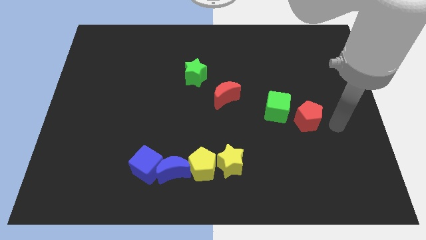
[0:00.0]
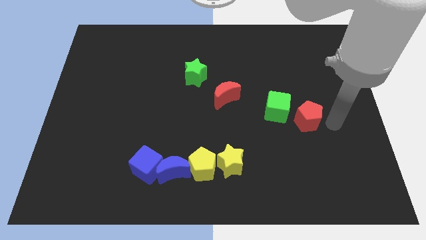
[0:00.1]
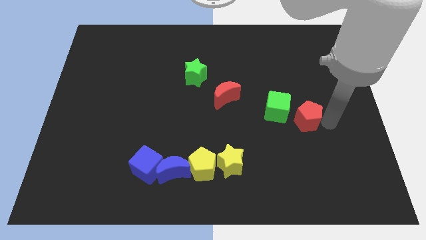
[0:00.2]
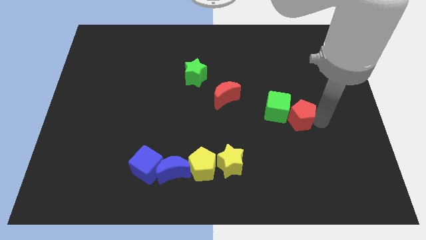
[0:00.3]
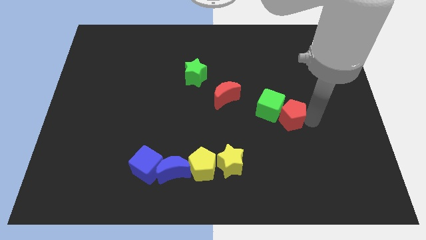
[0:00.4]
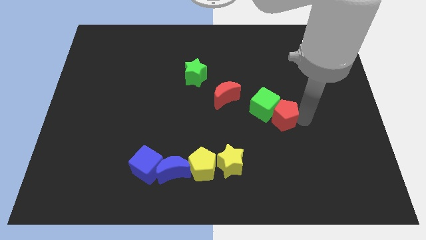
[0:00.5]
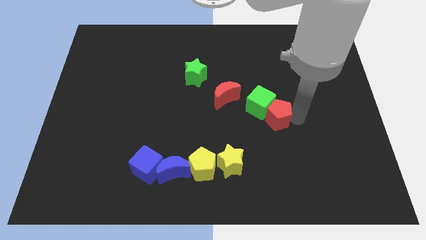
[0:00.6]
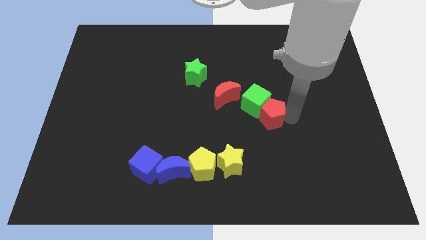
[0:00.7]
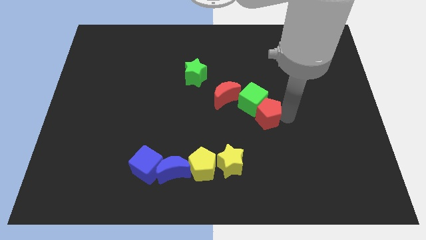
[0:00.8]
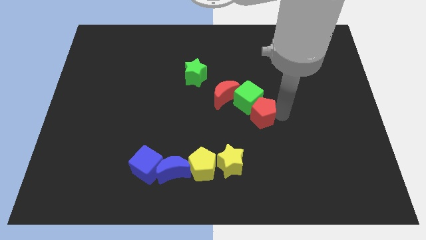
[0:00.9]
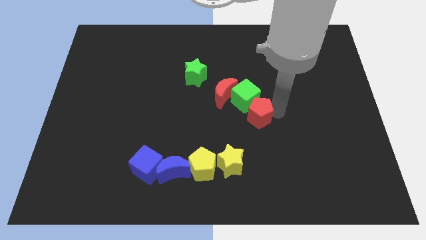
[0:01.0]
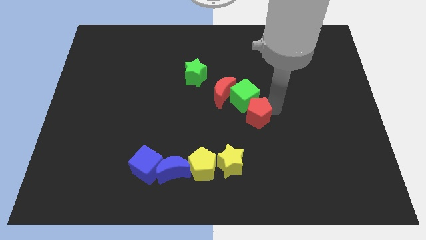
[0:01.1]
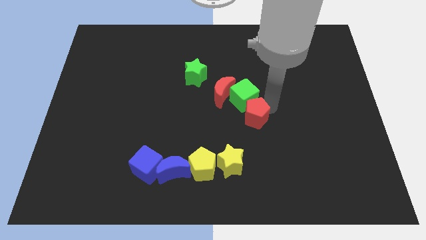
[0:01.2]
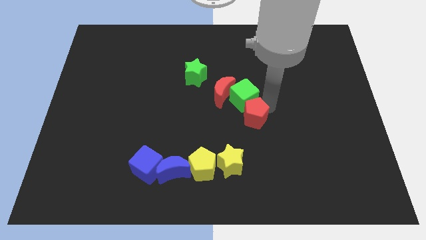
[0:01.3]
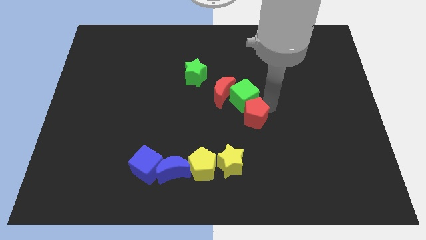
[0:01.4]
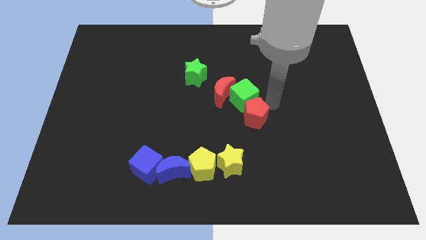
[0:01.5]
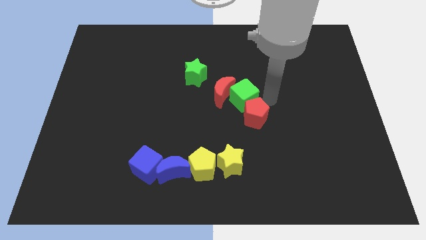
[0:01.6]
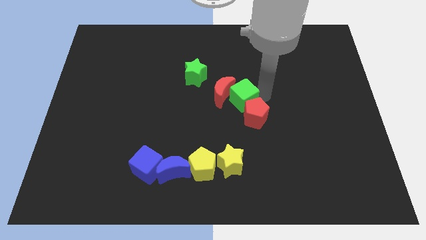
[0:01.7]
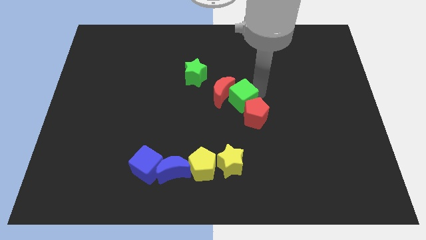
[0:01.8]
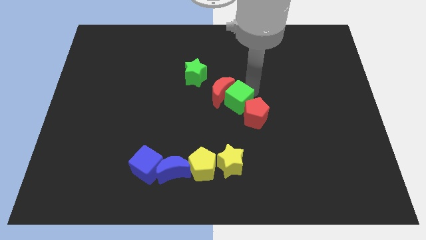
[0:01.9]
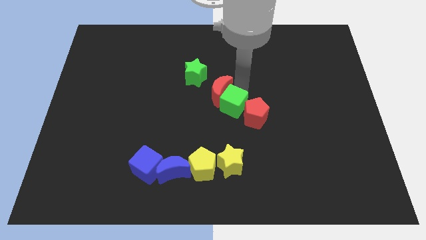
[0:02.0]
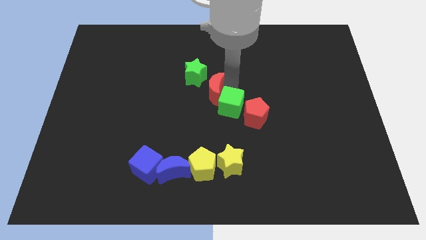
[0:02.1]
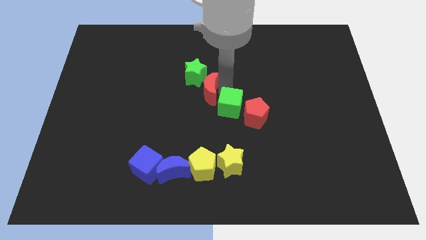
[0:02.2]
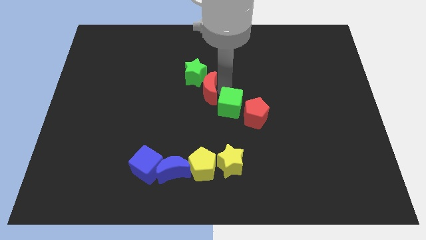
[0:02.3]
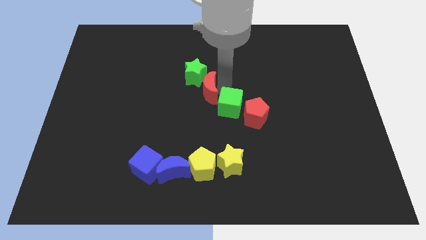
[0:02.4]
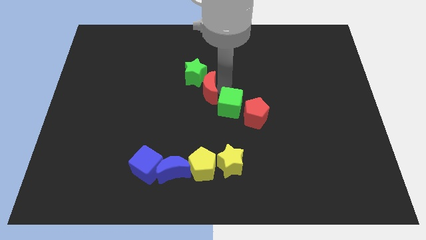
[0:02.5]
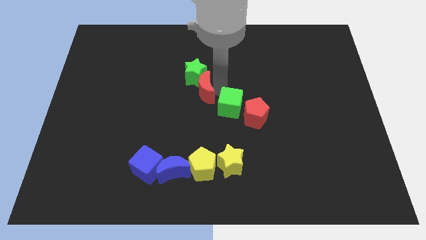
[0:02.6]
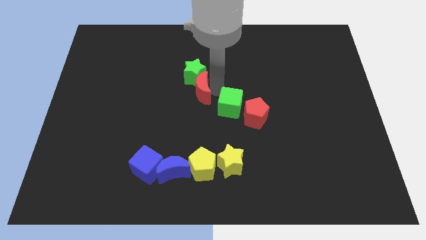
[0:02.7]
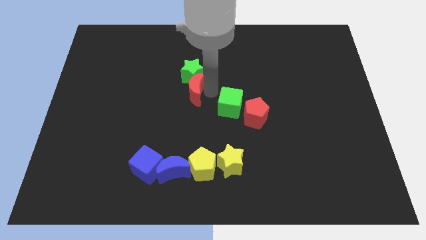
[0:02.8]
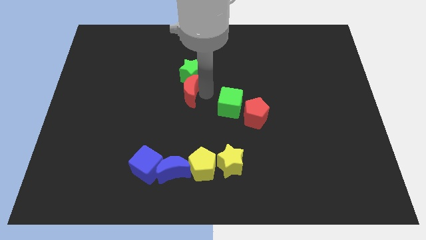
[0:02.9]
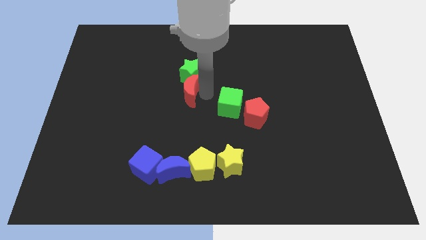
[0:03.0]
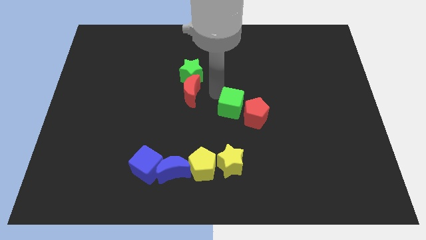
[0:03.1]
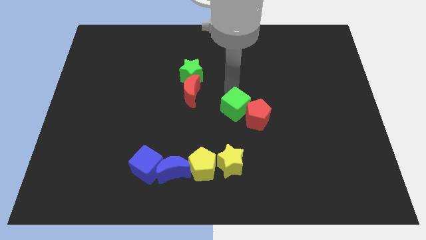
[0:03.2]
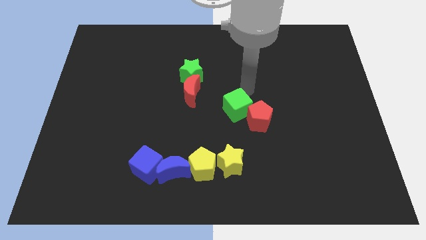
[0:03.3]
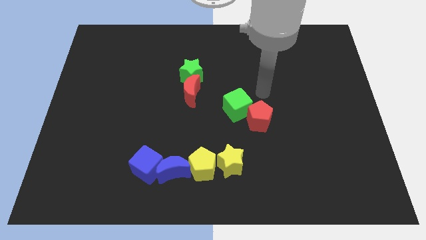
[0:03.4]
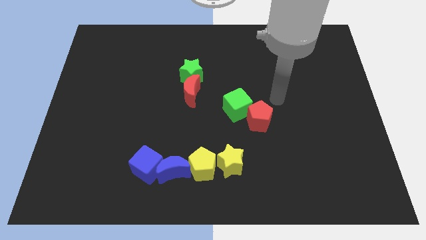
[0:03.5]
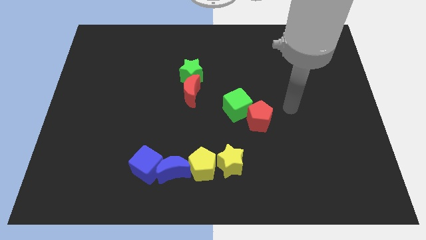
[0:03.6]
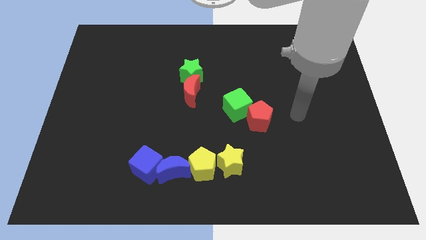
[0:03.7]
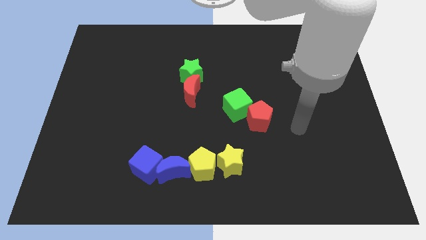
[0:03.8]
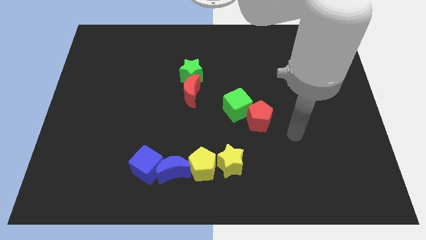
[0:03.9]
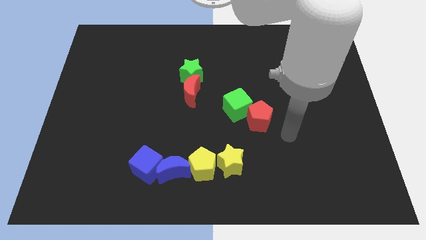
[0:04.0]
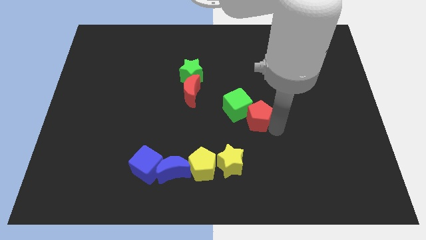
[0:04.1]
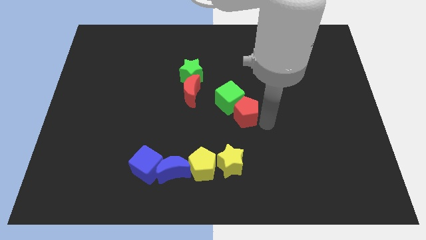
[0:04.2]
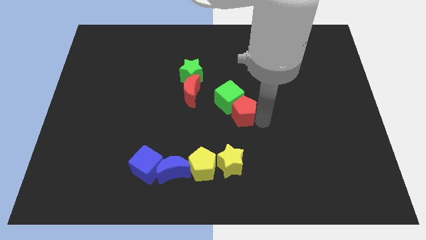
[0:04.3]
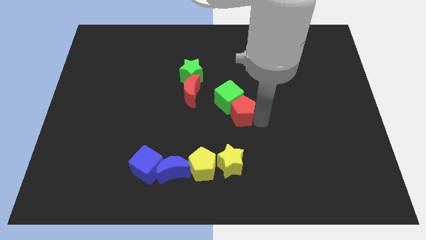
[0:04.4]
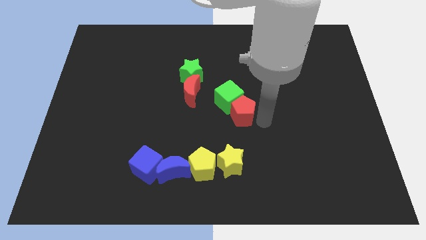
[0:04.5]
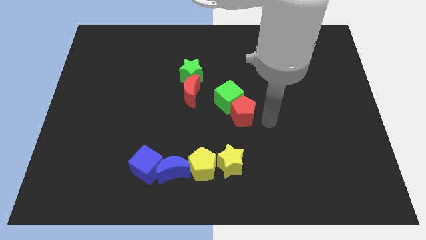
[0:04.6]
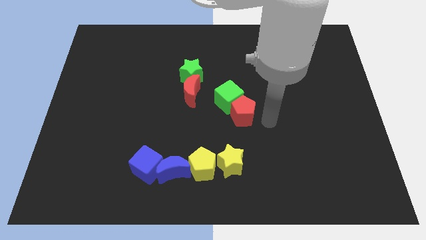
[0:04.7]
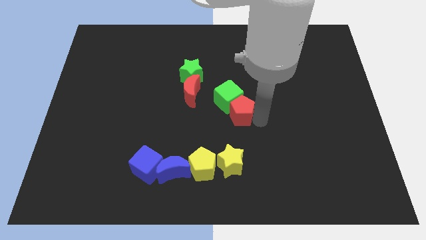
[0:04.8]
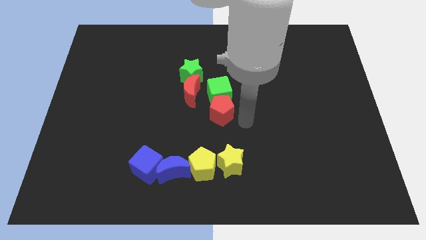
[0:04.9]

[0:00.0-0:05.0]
move the red pentagon and green cube to the center of the board

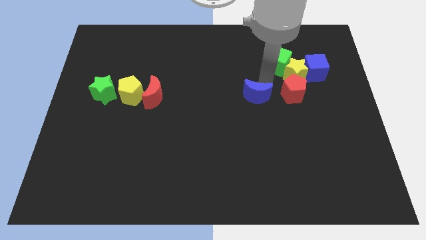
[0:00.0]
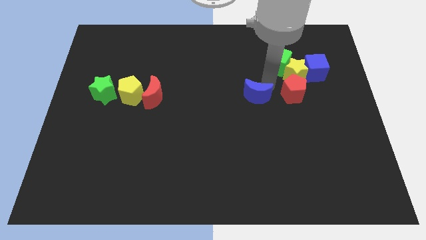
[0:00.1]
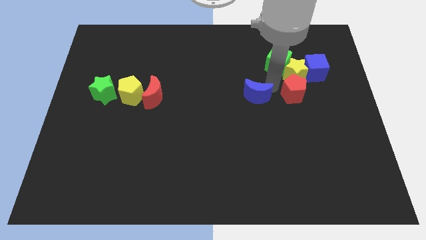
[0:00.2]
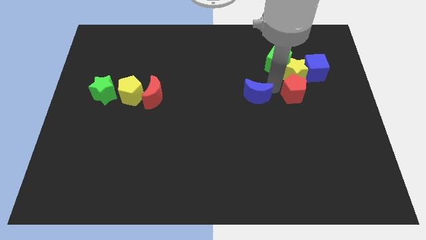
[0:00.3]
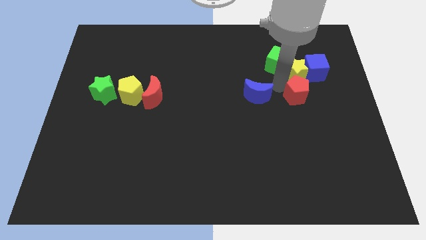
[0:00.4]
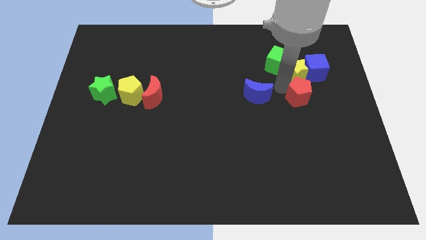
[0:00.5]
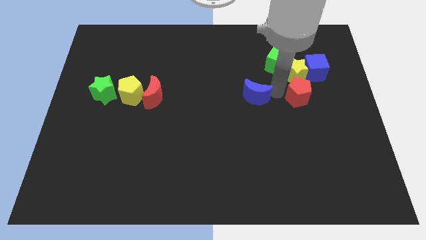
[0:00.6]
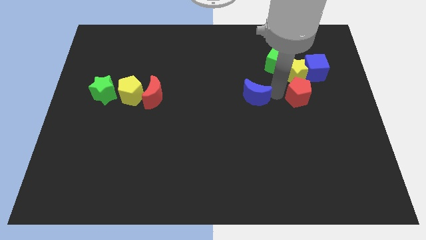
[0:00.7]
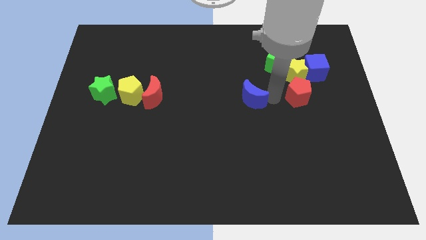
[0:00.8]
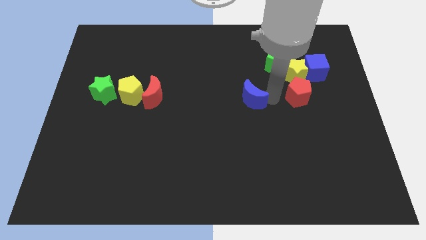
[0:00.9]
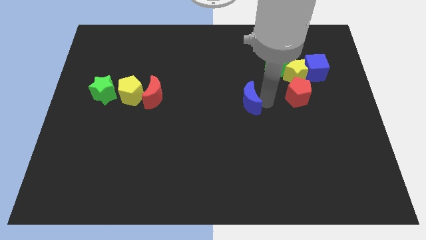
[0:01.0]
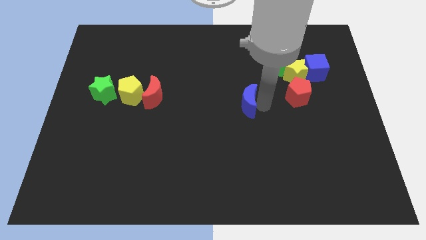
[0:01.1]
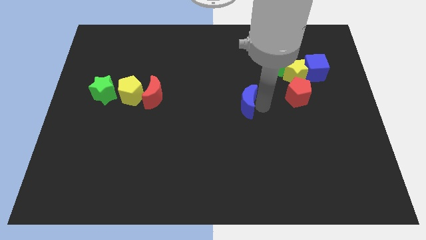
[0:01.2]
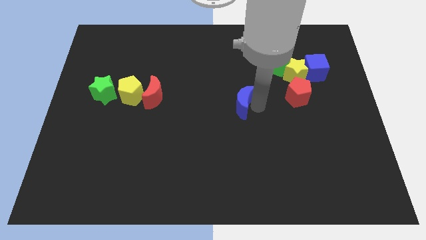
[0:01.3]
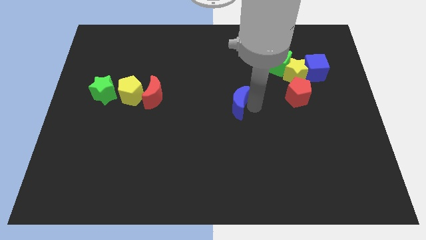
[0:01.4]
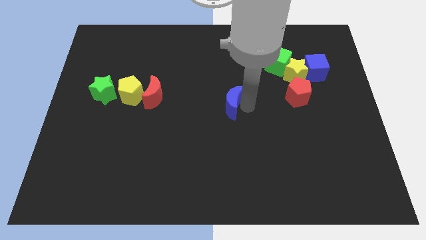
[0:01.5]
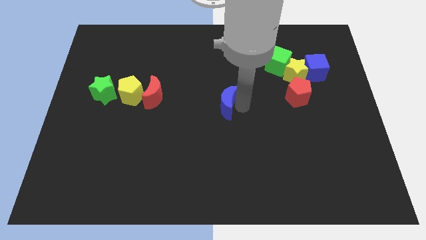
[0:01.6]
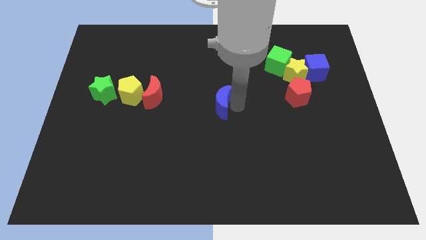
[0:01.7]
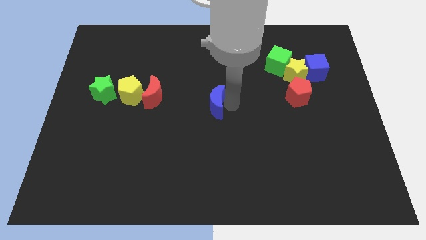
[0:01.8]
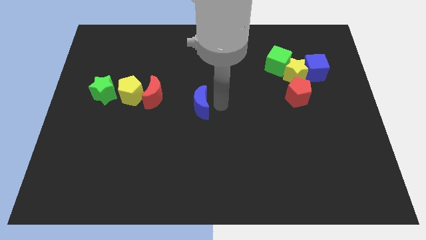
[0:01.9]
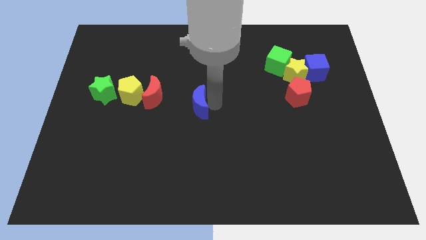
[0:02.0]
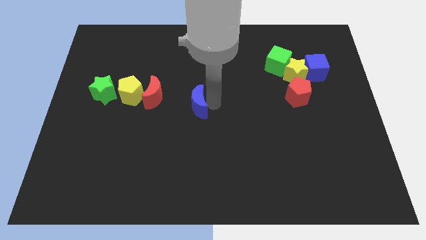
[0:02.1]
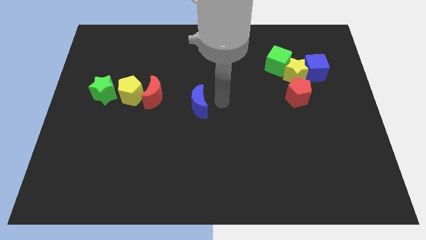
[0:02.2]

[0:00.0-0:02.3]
slide the blue moon towards the red moon

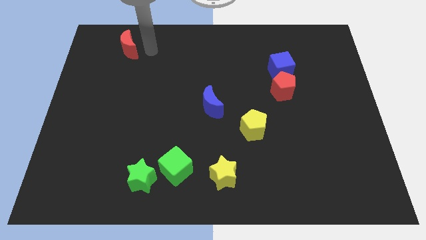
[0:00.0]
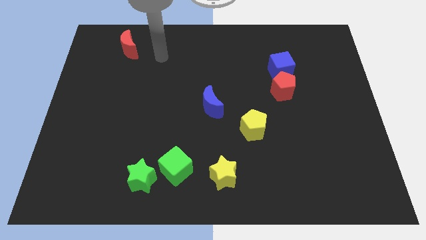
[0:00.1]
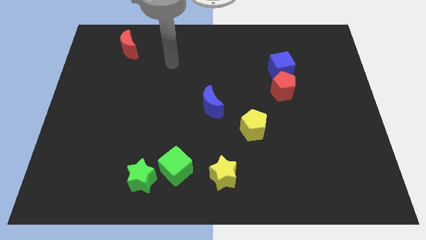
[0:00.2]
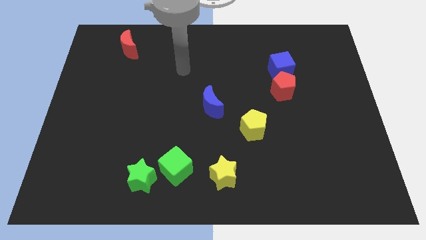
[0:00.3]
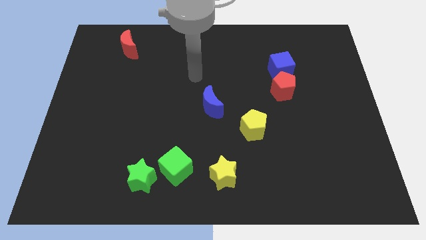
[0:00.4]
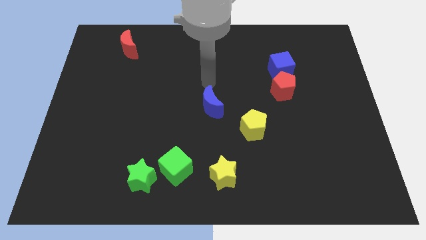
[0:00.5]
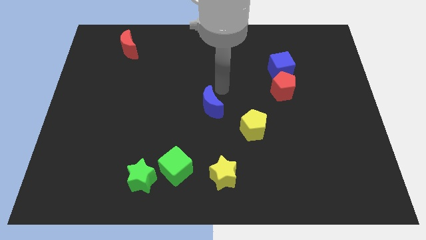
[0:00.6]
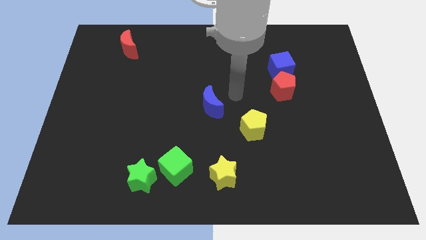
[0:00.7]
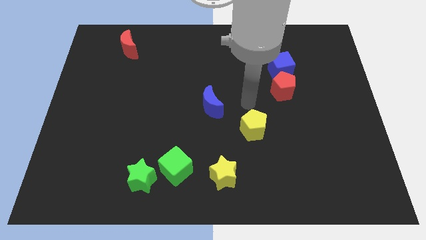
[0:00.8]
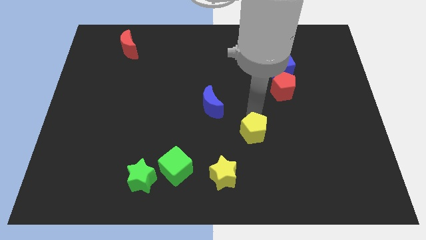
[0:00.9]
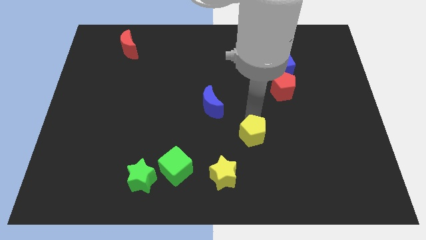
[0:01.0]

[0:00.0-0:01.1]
tap the top side of the yellow pentagon

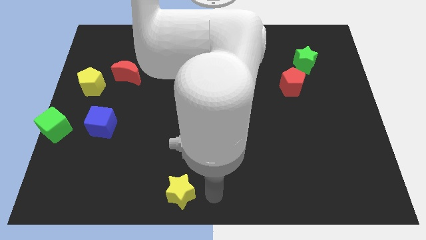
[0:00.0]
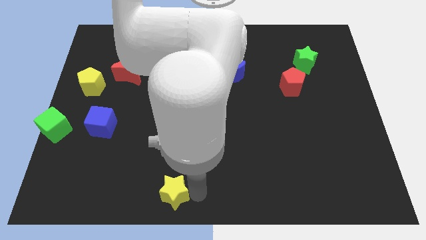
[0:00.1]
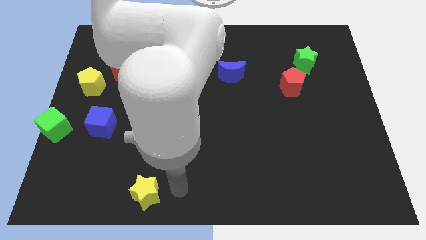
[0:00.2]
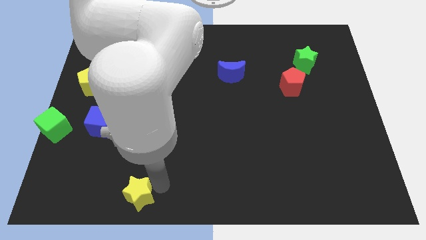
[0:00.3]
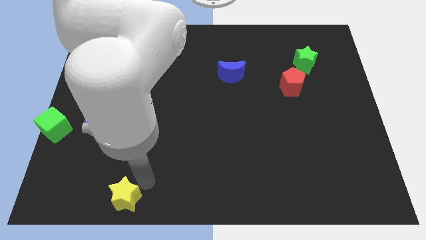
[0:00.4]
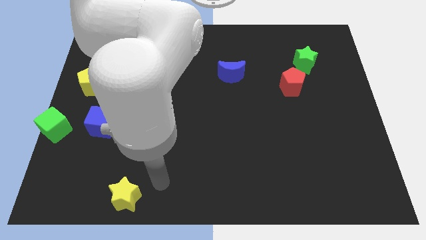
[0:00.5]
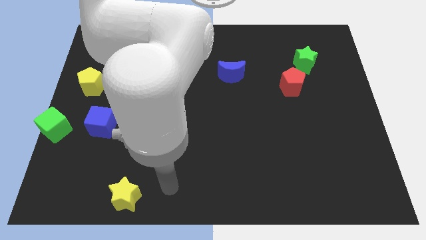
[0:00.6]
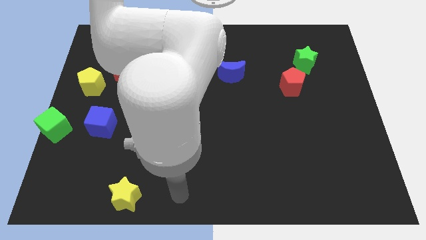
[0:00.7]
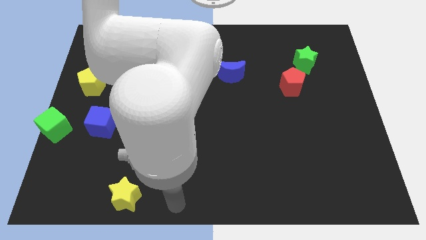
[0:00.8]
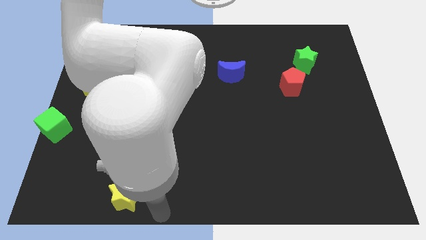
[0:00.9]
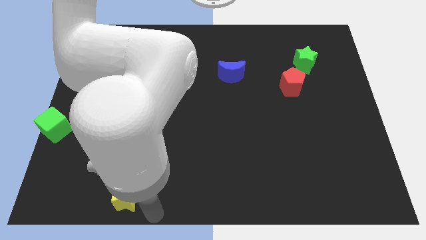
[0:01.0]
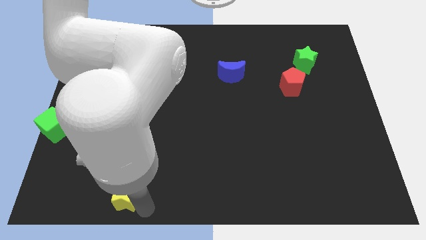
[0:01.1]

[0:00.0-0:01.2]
push the yellow star to the left side
